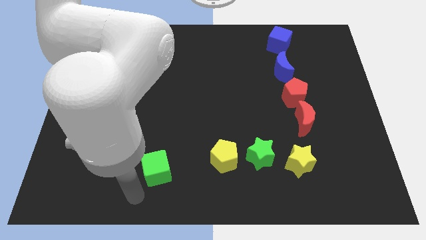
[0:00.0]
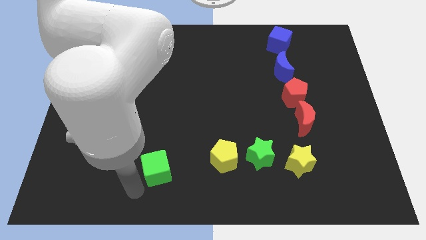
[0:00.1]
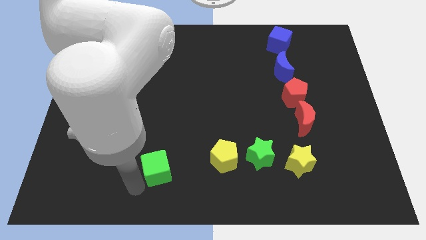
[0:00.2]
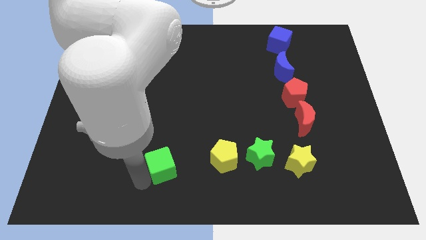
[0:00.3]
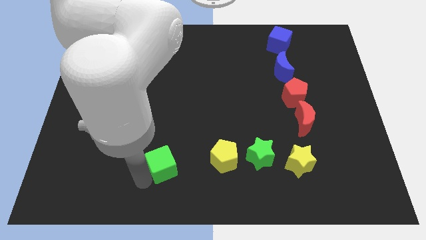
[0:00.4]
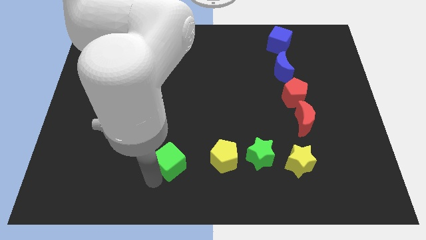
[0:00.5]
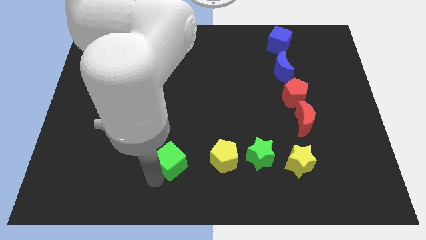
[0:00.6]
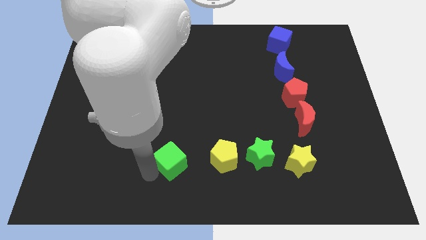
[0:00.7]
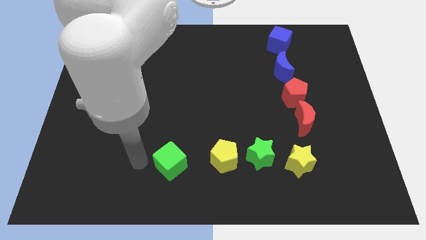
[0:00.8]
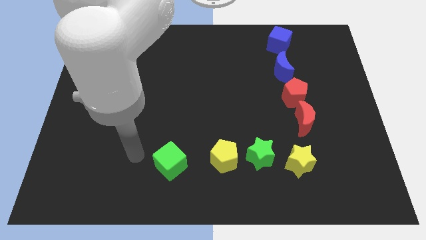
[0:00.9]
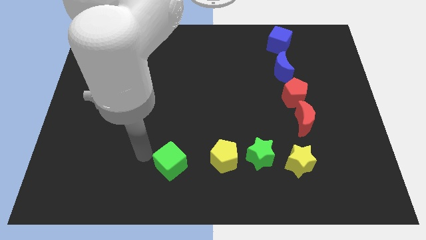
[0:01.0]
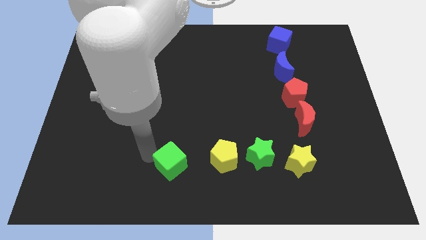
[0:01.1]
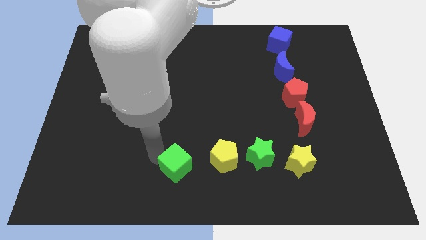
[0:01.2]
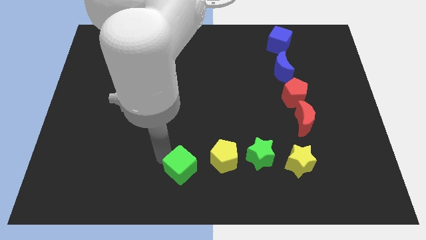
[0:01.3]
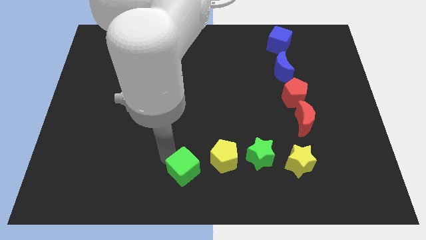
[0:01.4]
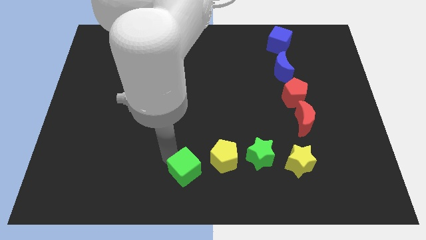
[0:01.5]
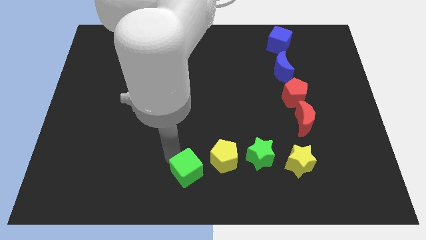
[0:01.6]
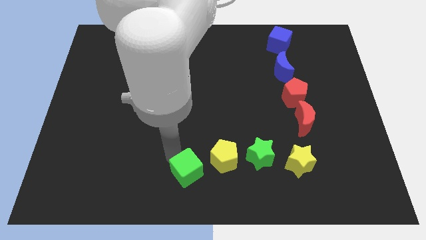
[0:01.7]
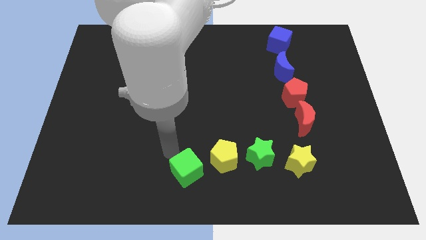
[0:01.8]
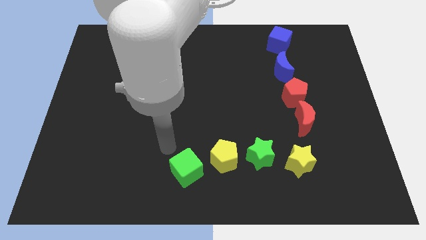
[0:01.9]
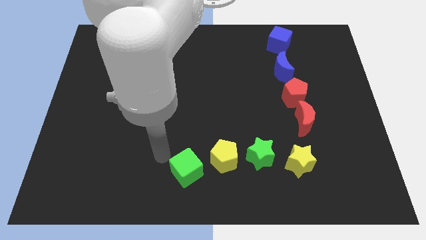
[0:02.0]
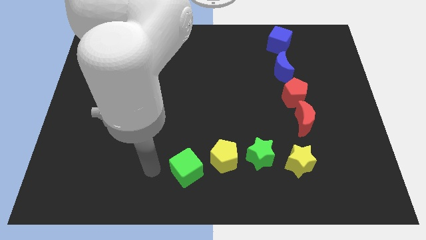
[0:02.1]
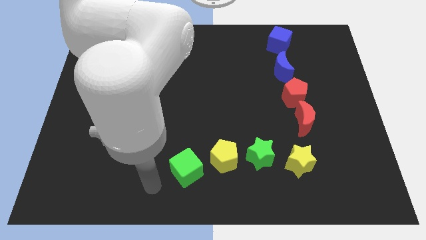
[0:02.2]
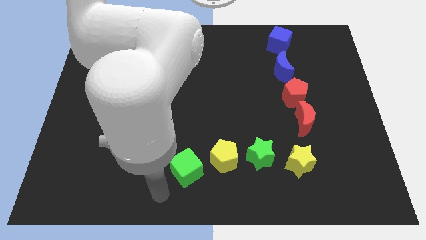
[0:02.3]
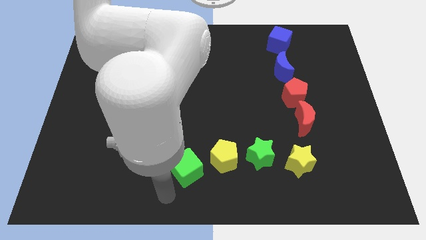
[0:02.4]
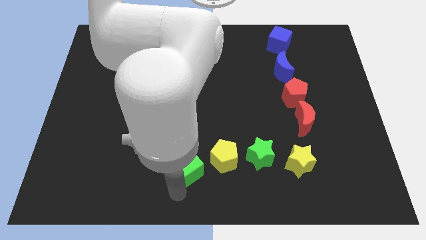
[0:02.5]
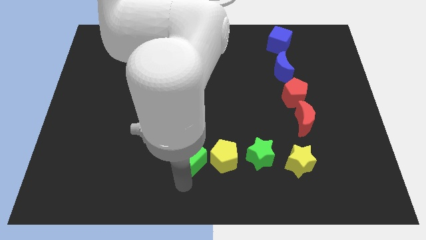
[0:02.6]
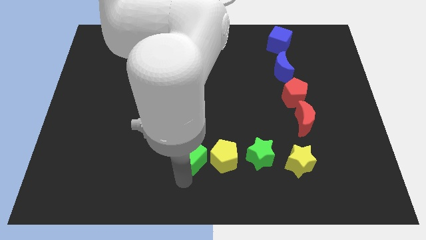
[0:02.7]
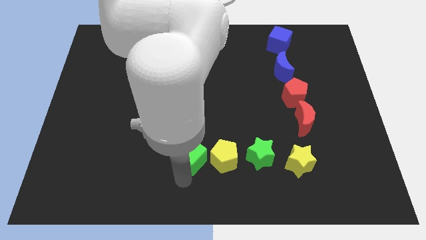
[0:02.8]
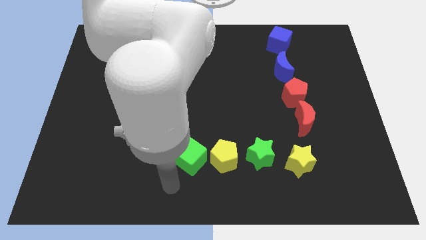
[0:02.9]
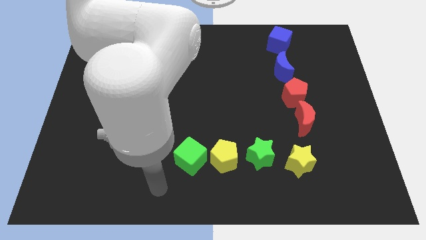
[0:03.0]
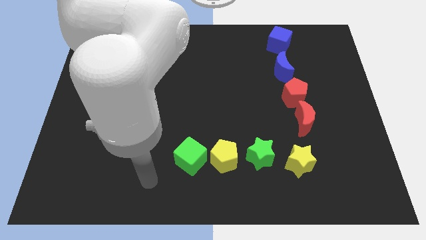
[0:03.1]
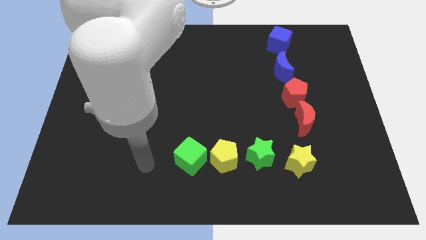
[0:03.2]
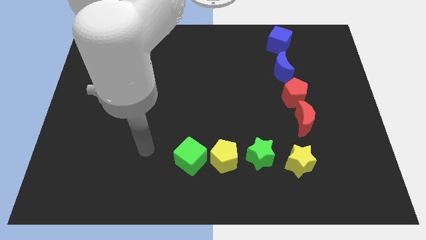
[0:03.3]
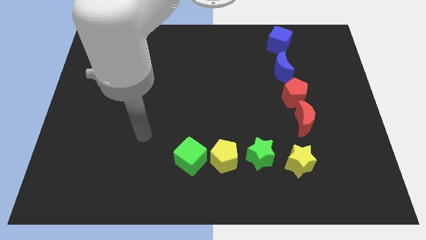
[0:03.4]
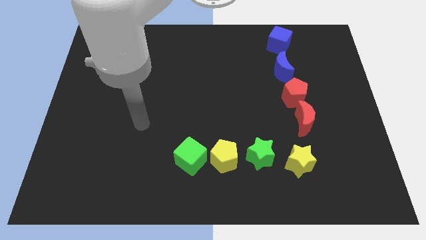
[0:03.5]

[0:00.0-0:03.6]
slide the green cube close to the yellow pentagon

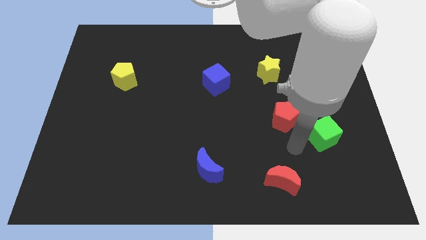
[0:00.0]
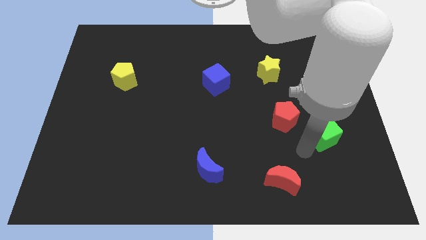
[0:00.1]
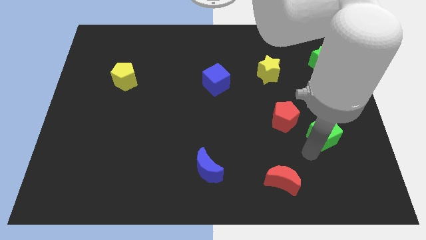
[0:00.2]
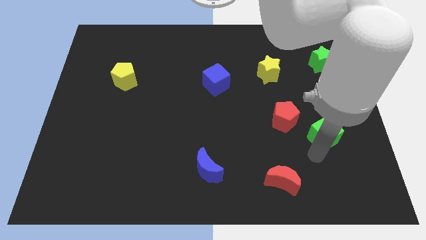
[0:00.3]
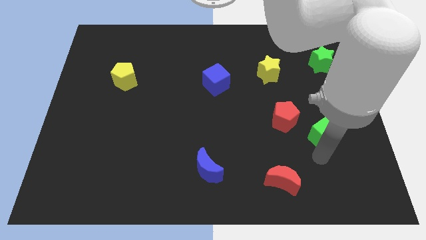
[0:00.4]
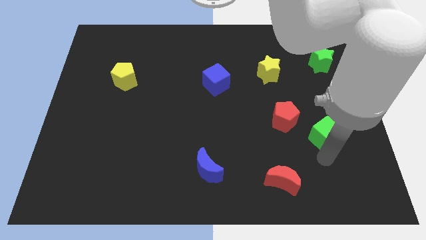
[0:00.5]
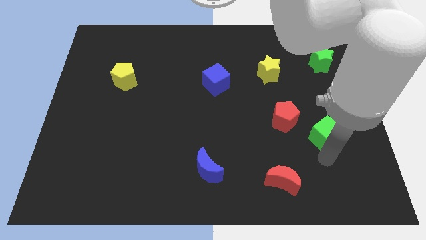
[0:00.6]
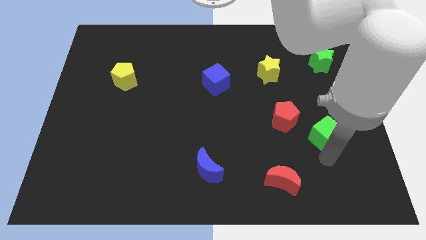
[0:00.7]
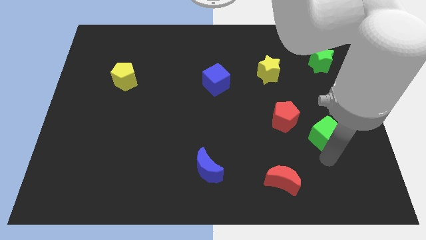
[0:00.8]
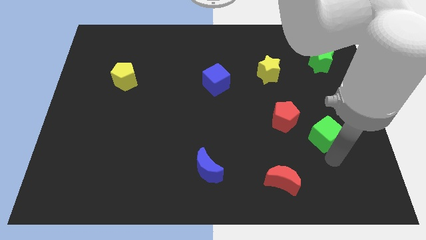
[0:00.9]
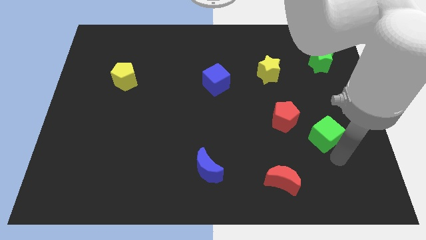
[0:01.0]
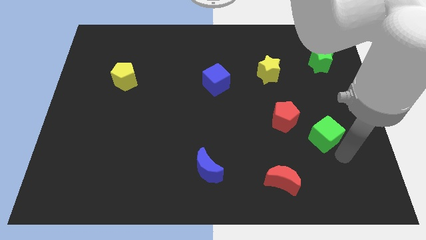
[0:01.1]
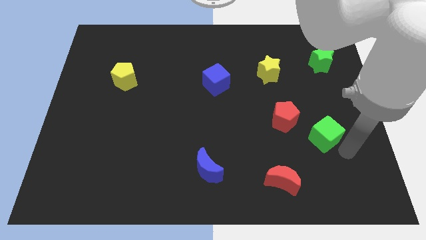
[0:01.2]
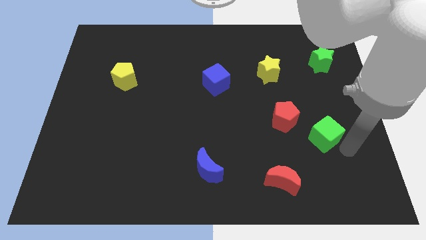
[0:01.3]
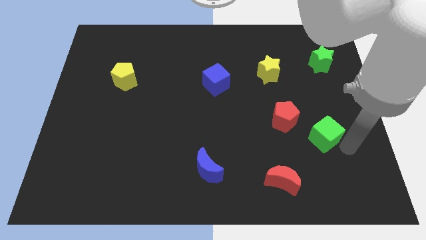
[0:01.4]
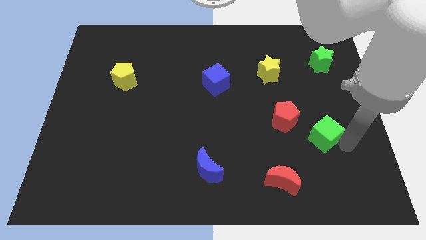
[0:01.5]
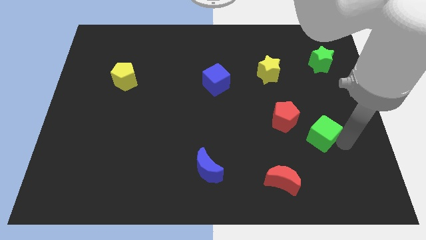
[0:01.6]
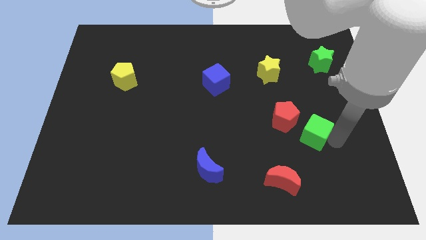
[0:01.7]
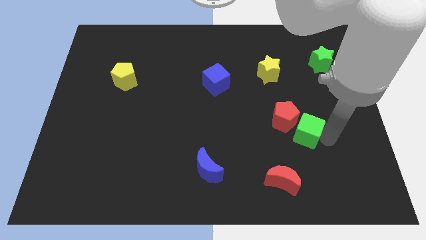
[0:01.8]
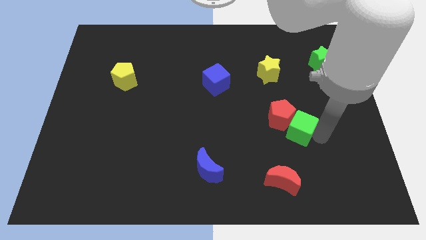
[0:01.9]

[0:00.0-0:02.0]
push the green cube towards the red pentagon

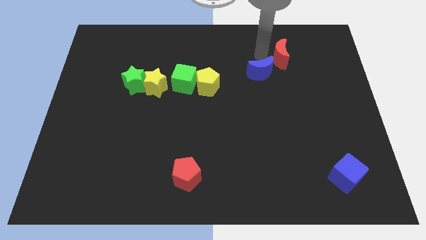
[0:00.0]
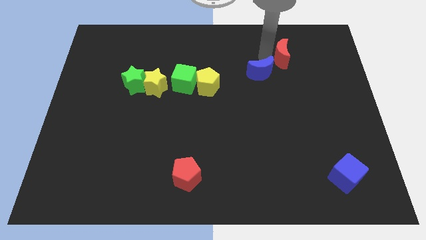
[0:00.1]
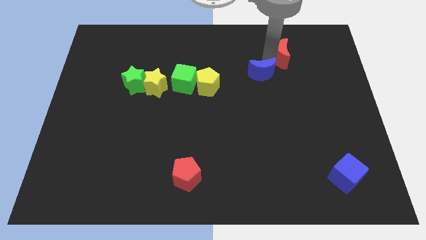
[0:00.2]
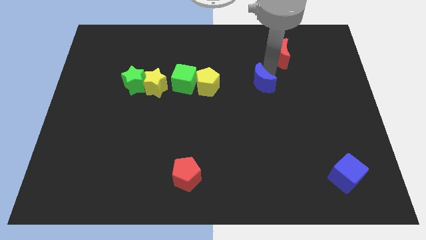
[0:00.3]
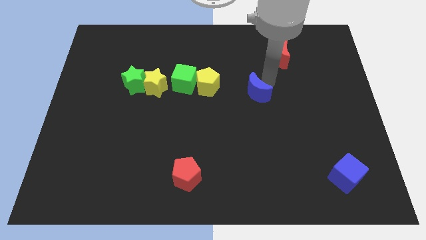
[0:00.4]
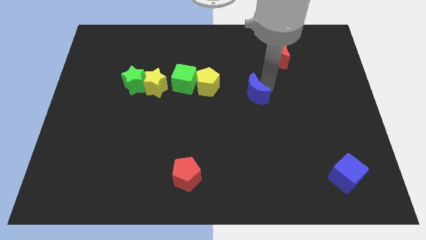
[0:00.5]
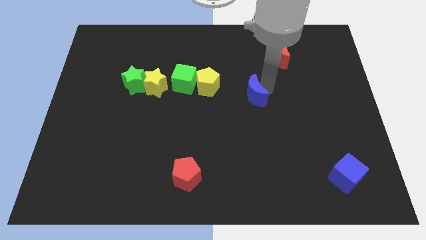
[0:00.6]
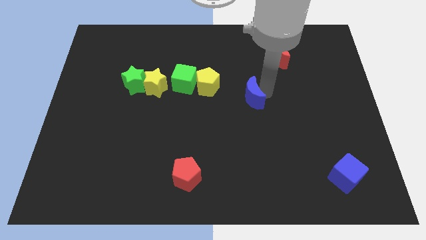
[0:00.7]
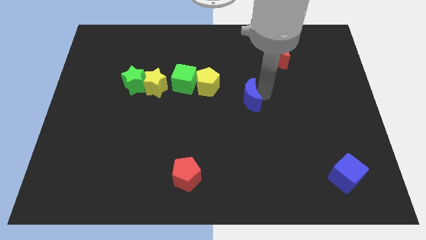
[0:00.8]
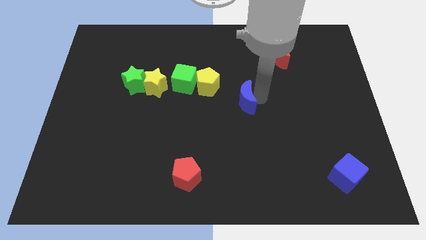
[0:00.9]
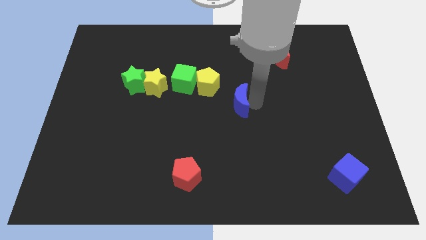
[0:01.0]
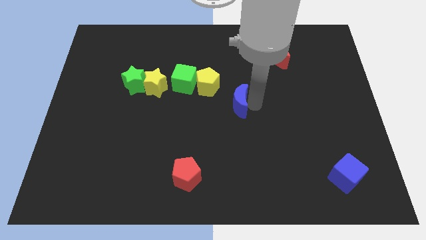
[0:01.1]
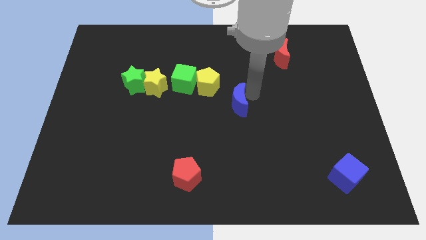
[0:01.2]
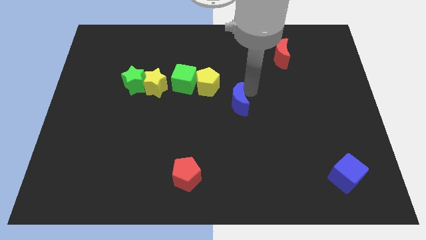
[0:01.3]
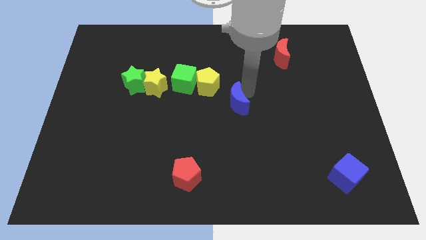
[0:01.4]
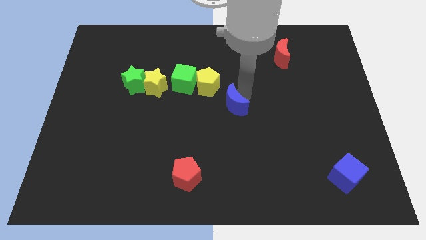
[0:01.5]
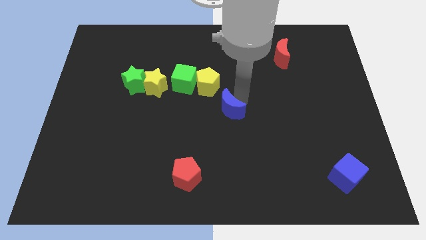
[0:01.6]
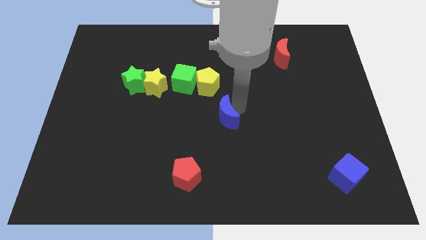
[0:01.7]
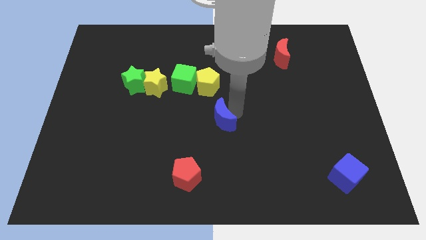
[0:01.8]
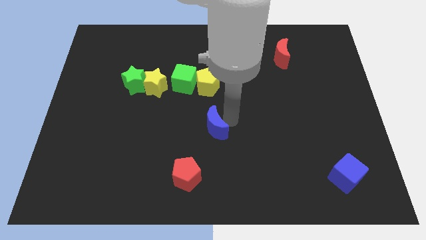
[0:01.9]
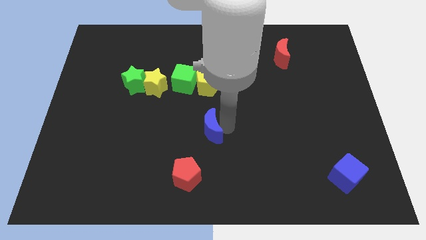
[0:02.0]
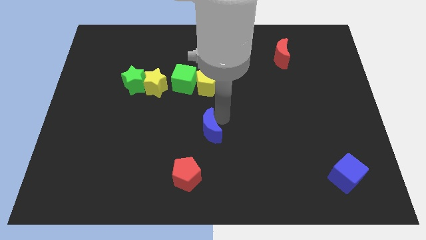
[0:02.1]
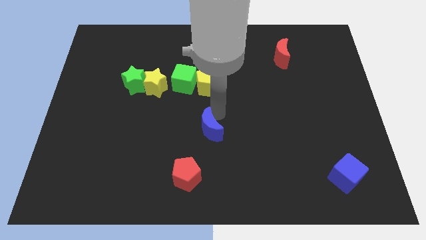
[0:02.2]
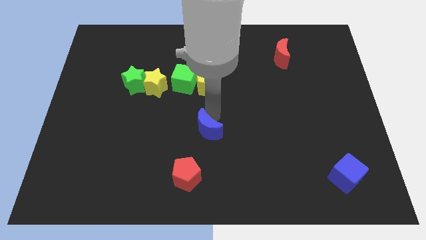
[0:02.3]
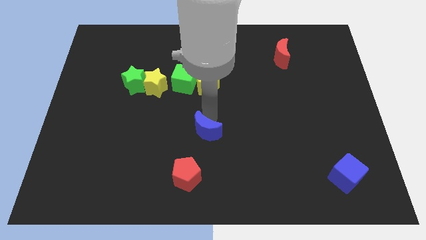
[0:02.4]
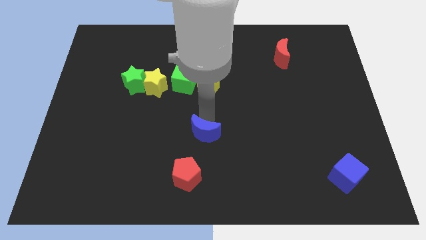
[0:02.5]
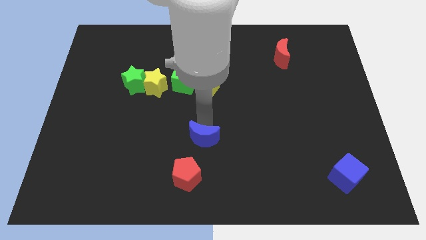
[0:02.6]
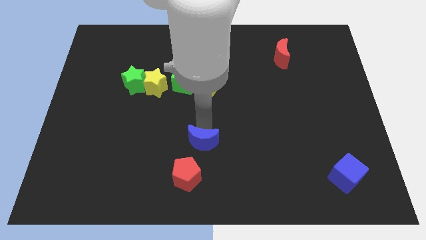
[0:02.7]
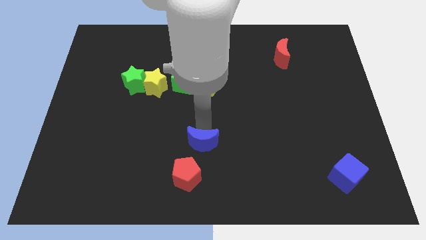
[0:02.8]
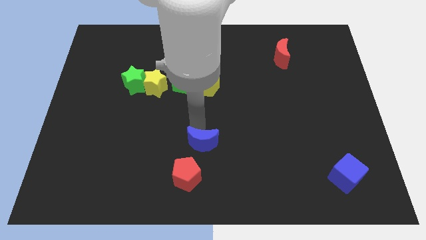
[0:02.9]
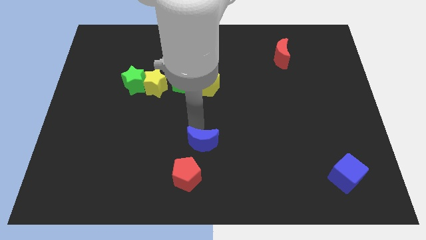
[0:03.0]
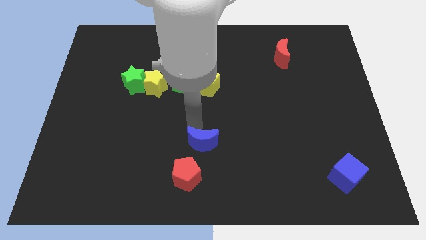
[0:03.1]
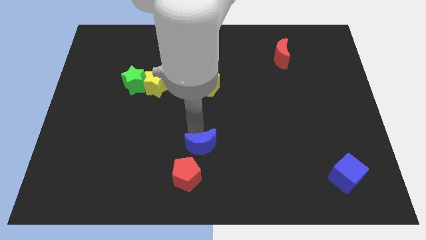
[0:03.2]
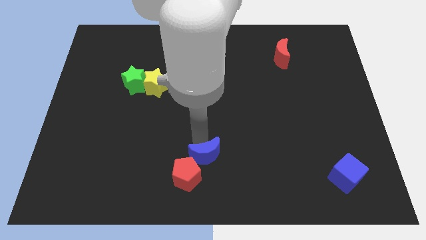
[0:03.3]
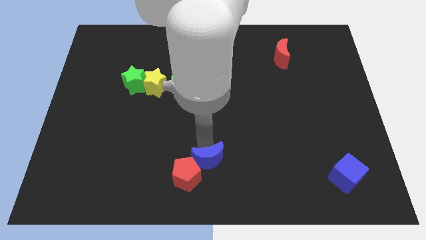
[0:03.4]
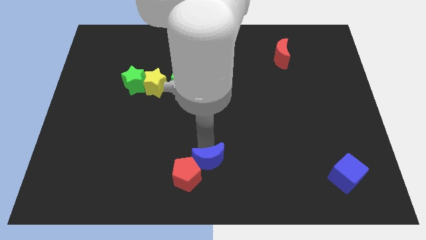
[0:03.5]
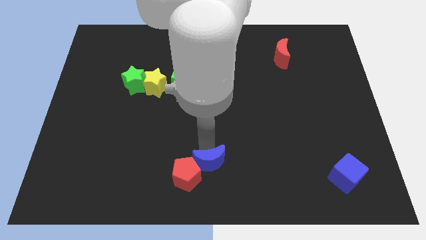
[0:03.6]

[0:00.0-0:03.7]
separate blue moon from red moon
